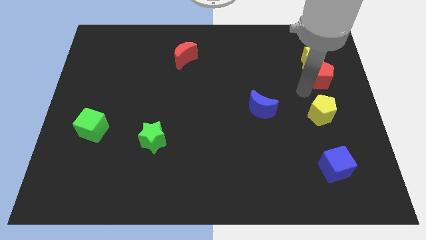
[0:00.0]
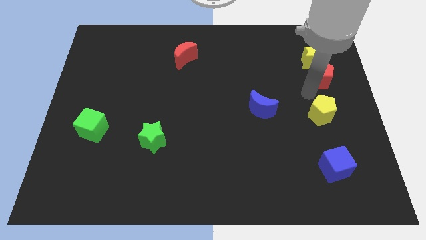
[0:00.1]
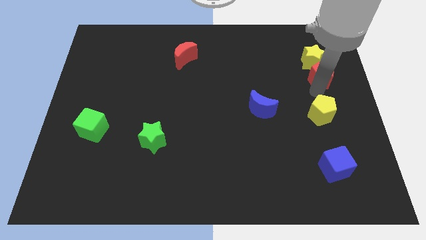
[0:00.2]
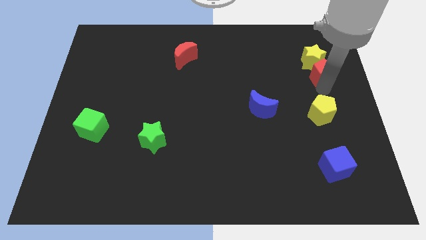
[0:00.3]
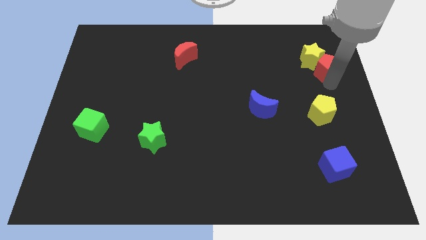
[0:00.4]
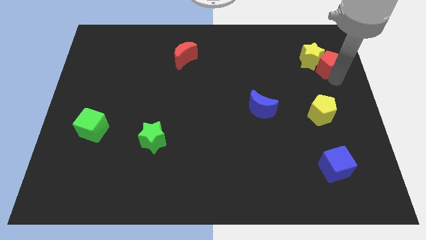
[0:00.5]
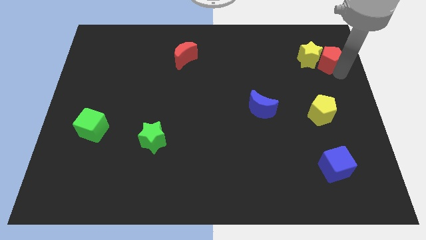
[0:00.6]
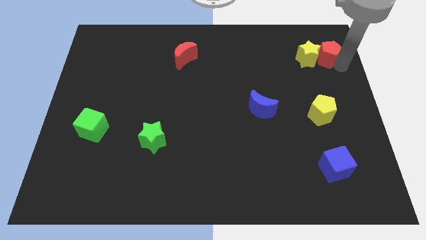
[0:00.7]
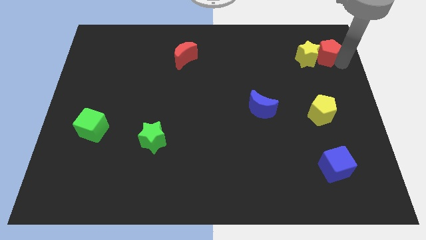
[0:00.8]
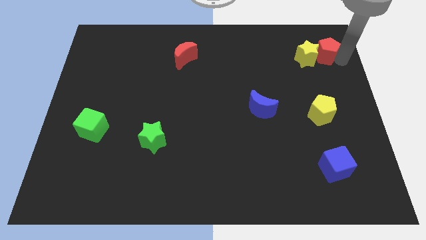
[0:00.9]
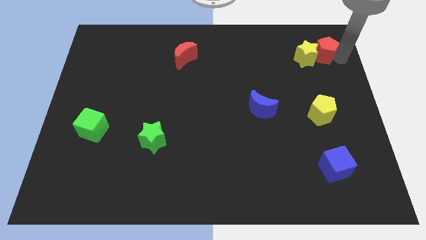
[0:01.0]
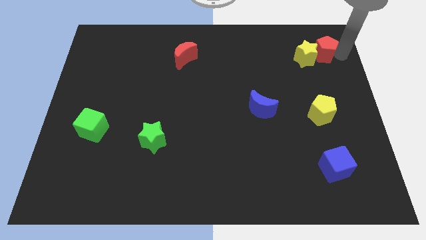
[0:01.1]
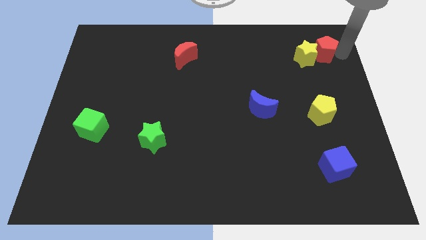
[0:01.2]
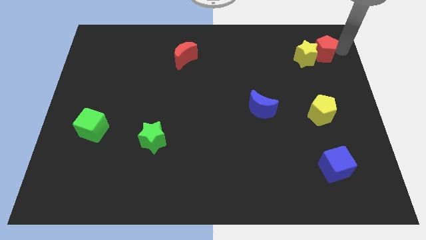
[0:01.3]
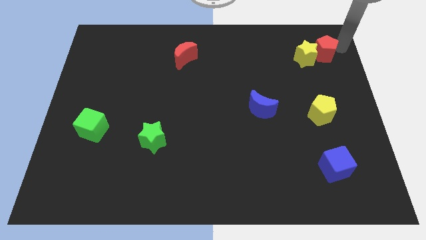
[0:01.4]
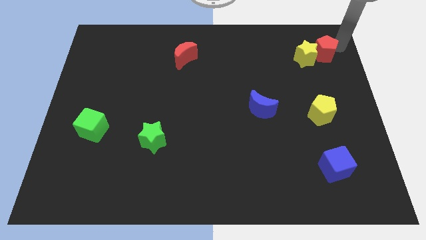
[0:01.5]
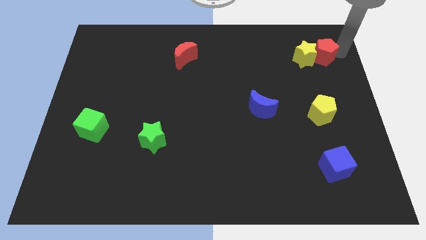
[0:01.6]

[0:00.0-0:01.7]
move the red pentagon to the right of the yellow star

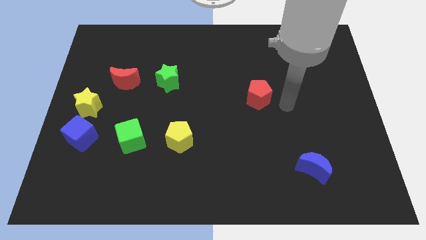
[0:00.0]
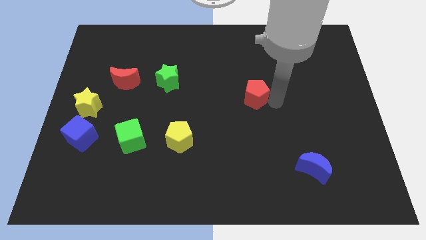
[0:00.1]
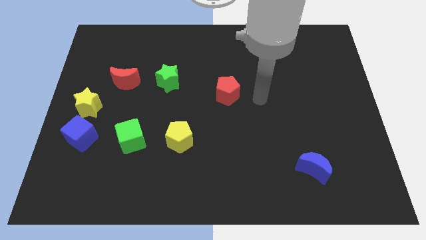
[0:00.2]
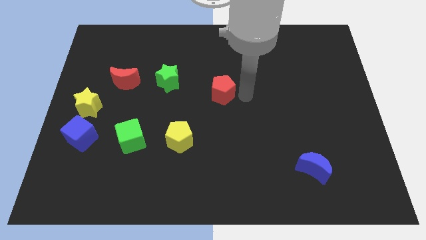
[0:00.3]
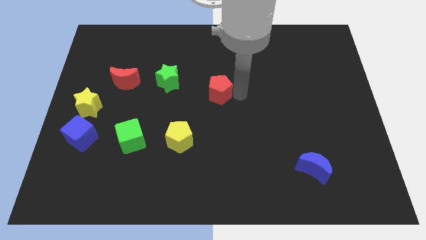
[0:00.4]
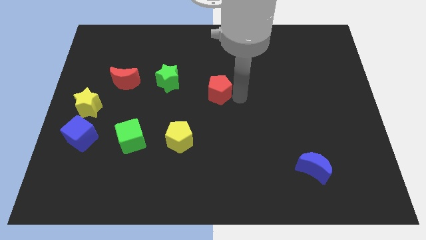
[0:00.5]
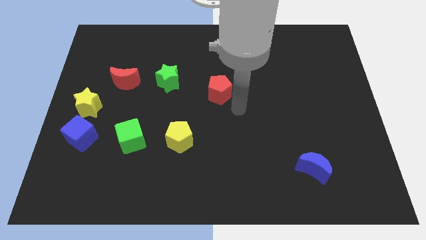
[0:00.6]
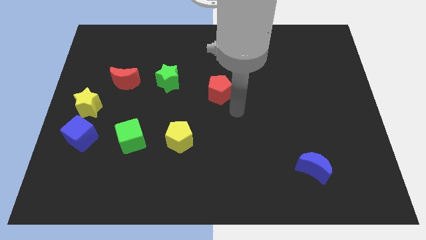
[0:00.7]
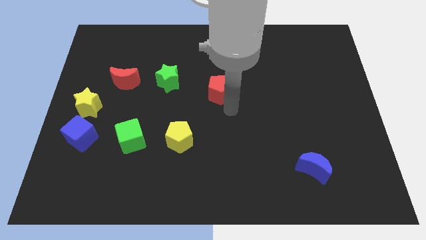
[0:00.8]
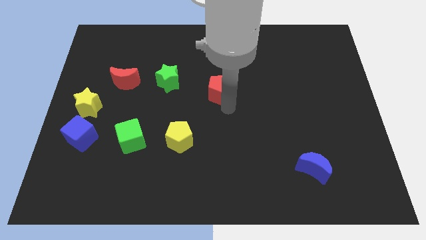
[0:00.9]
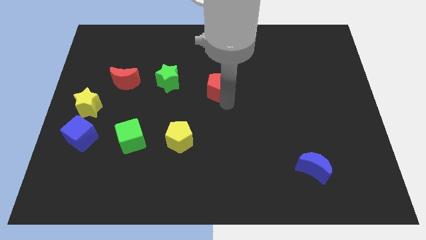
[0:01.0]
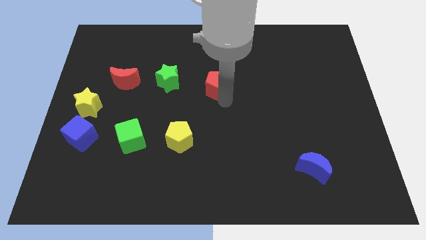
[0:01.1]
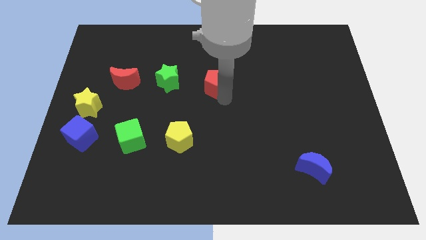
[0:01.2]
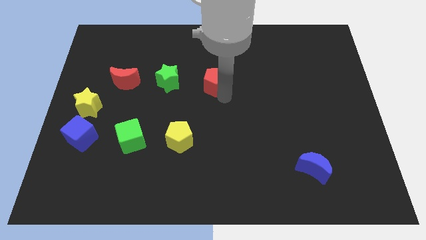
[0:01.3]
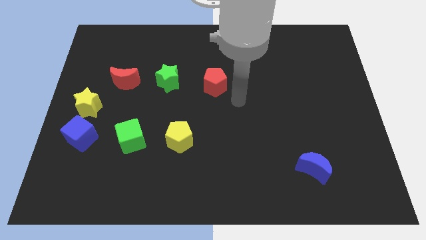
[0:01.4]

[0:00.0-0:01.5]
place the red pentagon towards the center of the board

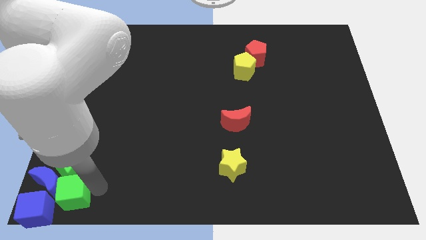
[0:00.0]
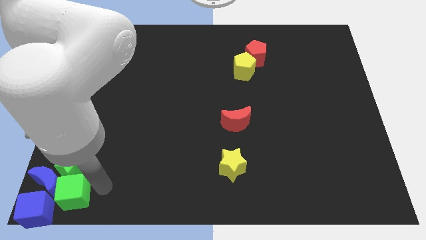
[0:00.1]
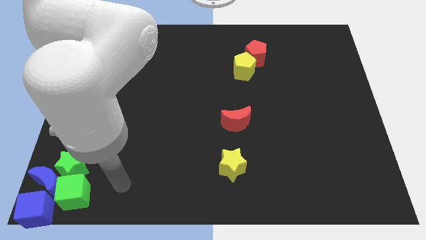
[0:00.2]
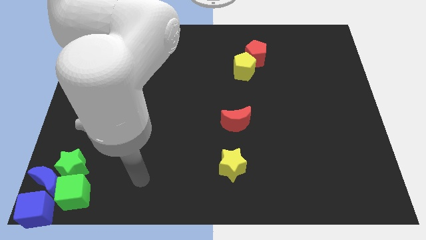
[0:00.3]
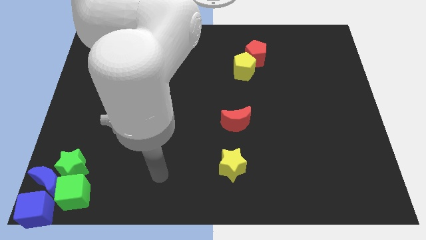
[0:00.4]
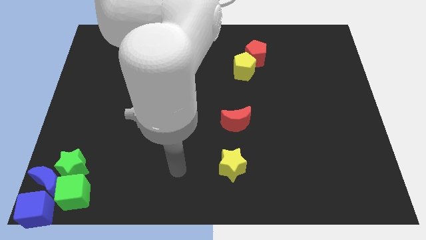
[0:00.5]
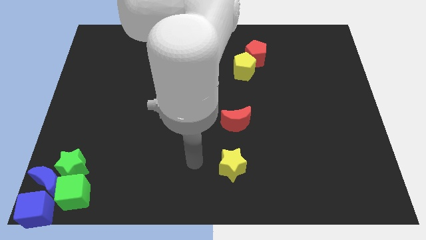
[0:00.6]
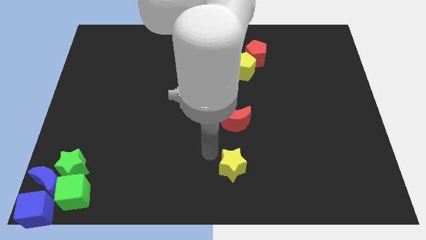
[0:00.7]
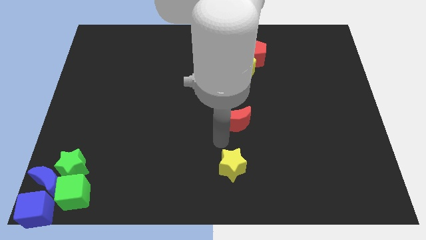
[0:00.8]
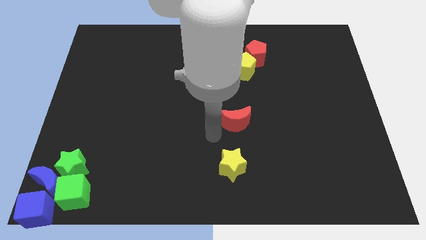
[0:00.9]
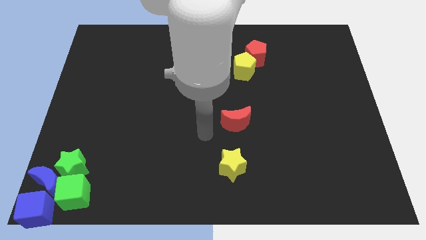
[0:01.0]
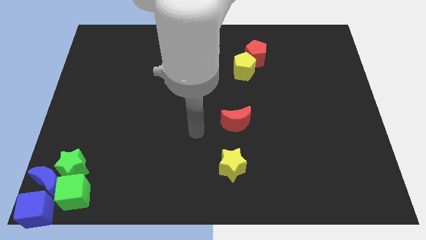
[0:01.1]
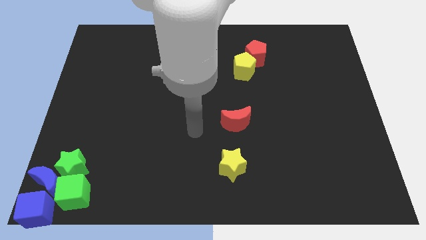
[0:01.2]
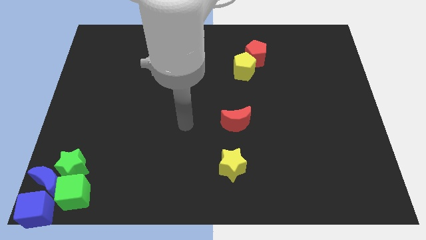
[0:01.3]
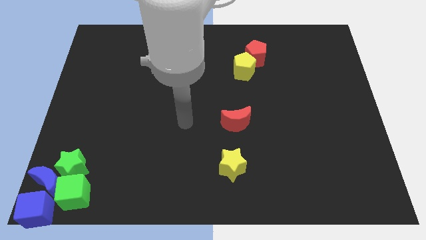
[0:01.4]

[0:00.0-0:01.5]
move yourself away from the green cube

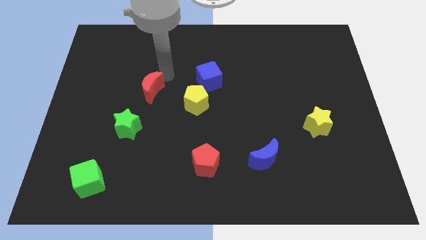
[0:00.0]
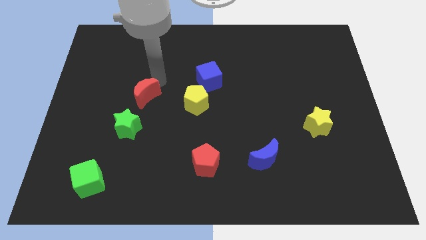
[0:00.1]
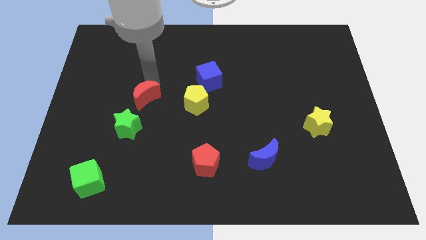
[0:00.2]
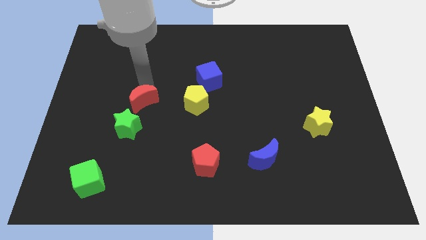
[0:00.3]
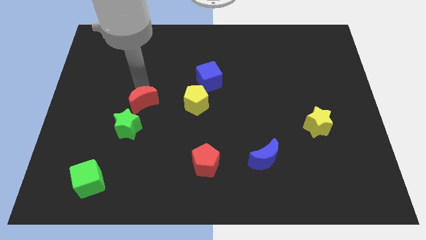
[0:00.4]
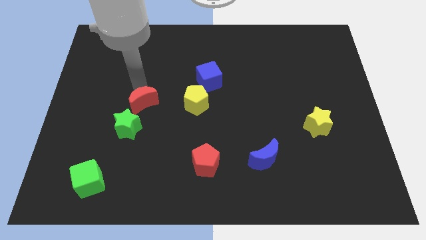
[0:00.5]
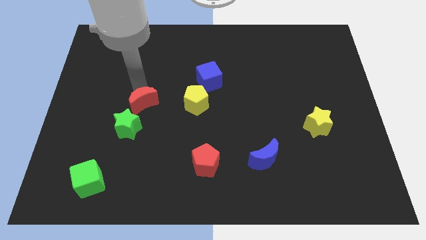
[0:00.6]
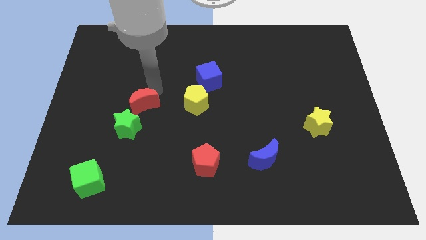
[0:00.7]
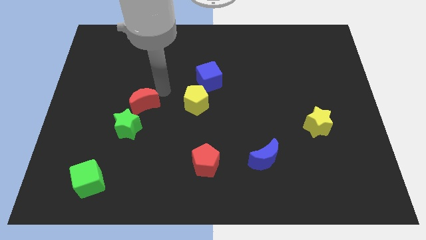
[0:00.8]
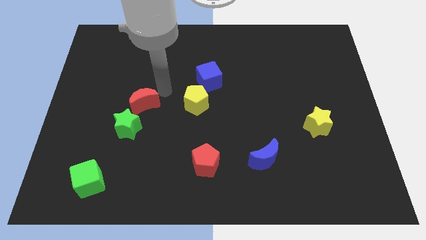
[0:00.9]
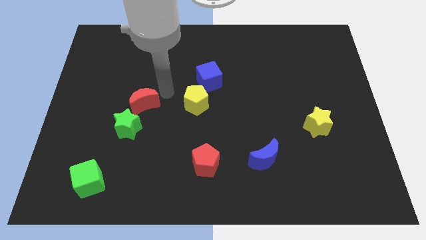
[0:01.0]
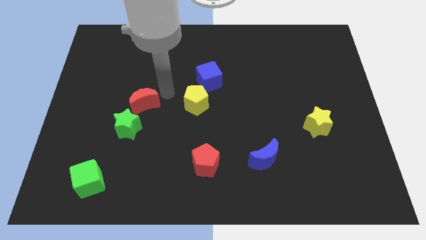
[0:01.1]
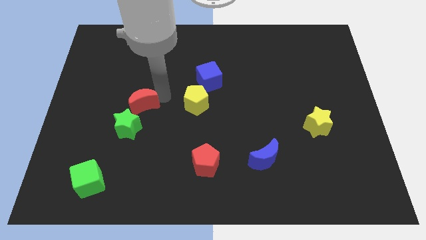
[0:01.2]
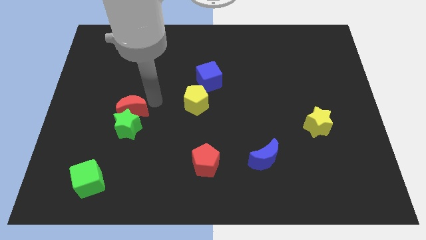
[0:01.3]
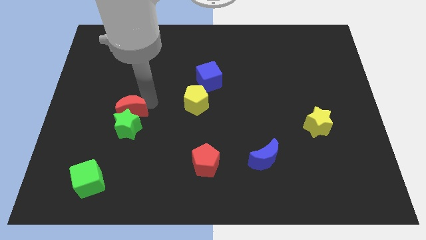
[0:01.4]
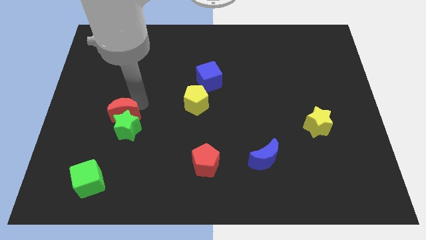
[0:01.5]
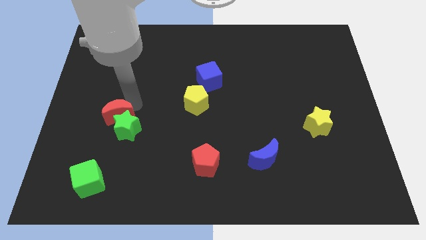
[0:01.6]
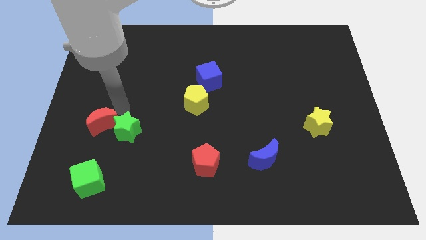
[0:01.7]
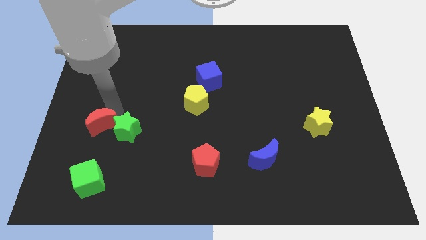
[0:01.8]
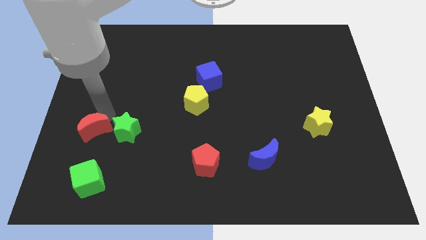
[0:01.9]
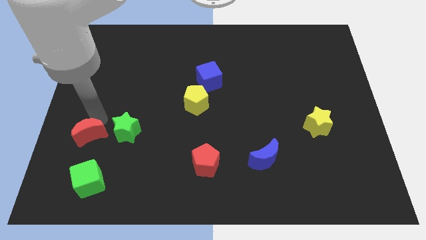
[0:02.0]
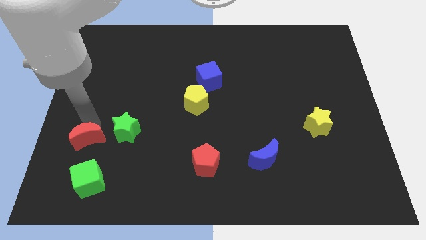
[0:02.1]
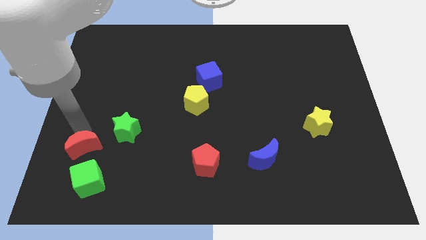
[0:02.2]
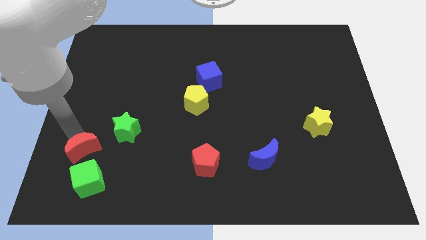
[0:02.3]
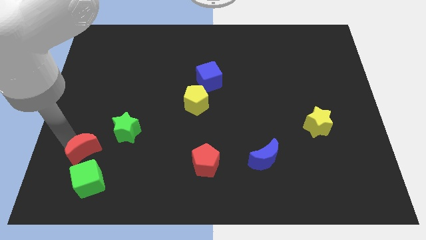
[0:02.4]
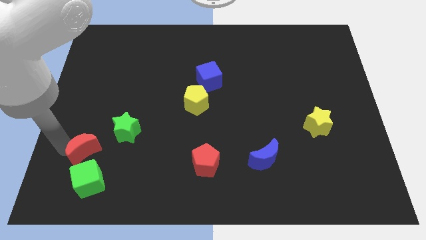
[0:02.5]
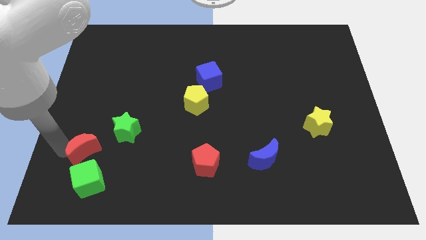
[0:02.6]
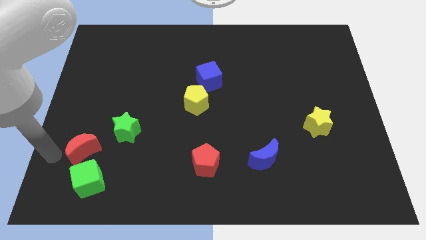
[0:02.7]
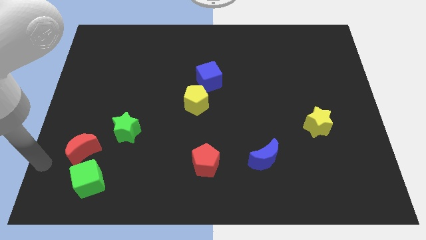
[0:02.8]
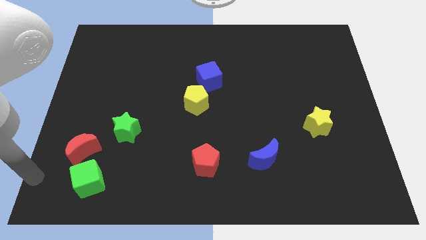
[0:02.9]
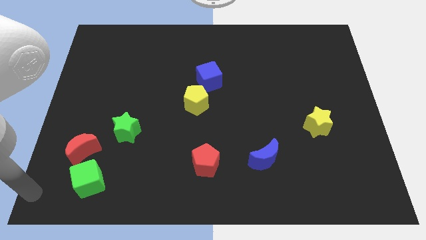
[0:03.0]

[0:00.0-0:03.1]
move red crescent towards green cube

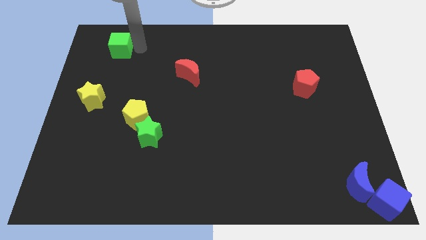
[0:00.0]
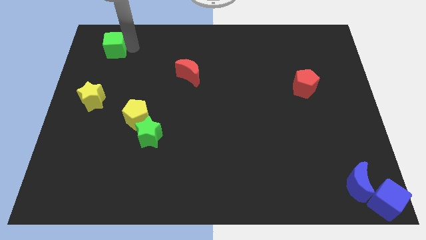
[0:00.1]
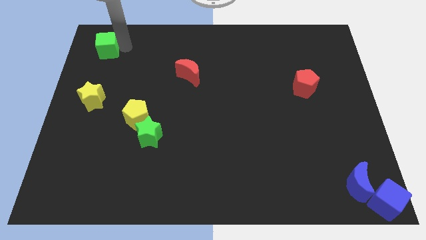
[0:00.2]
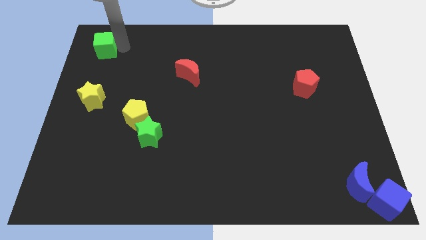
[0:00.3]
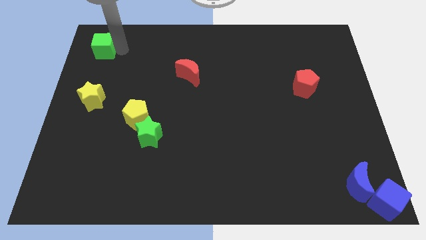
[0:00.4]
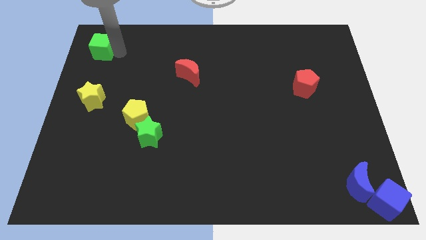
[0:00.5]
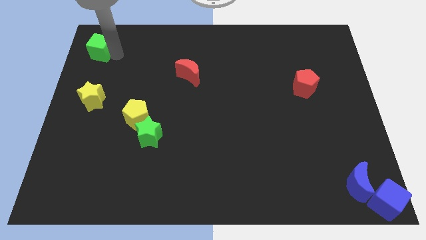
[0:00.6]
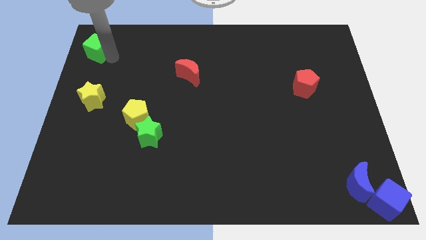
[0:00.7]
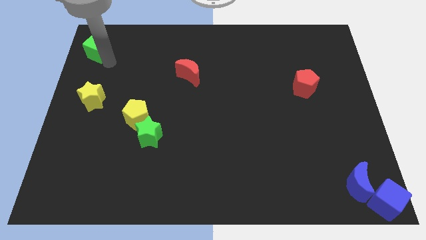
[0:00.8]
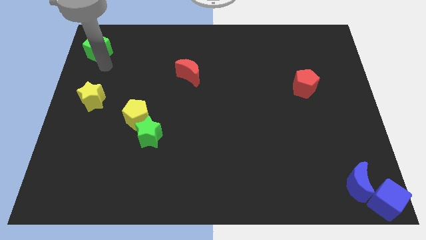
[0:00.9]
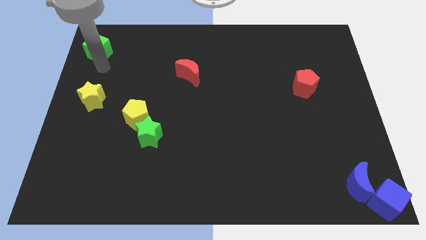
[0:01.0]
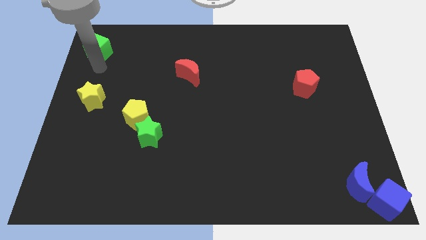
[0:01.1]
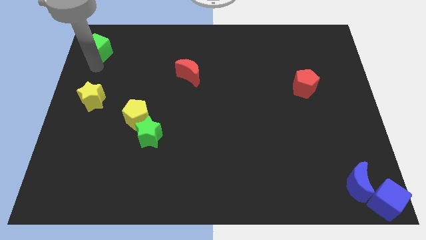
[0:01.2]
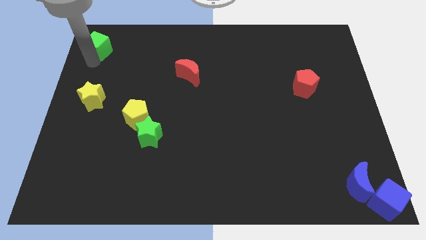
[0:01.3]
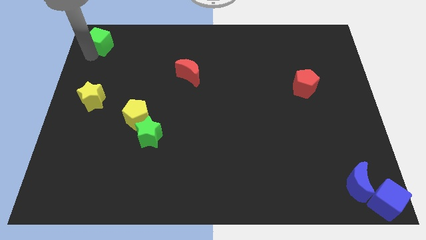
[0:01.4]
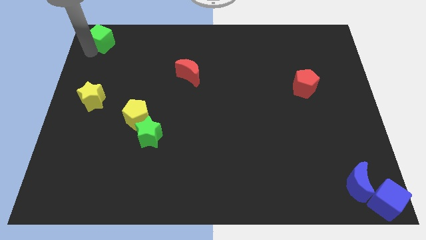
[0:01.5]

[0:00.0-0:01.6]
place the green cube to the vertical top side of the yellow star
